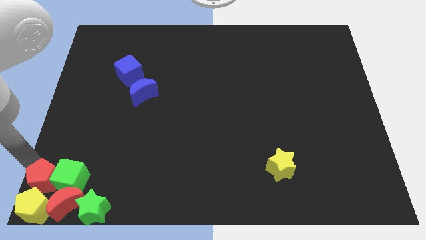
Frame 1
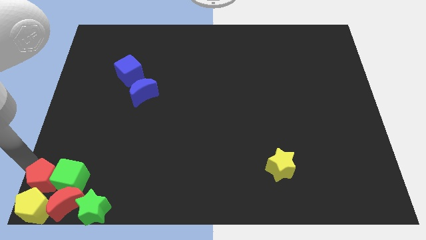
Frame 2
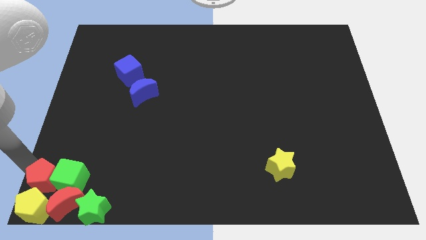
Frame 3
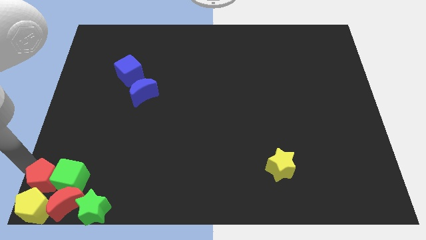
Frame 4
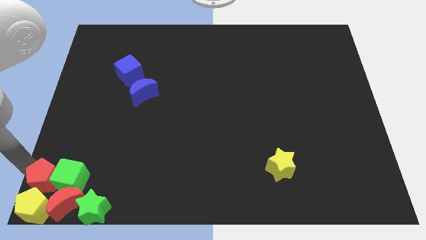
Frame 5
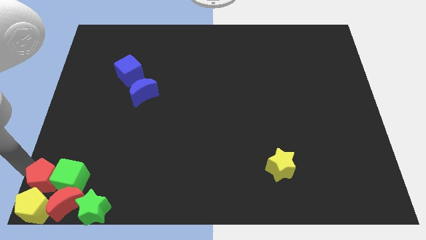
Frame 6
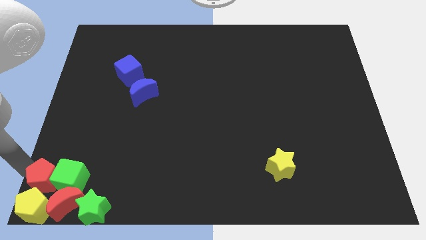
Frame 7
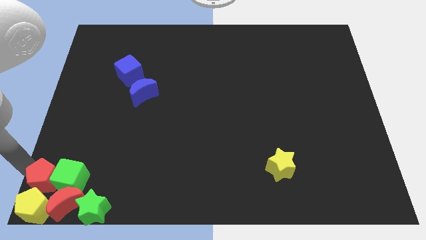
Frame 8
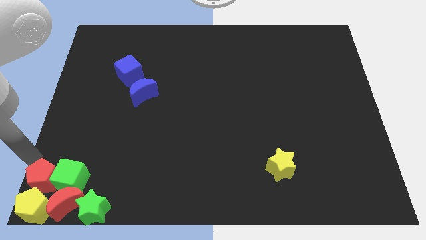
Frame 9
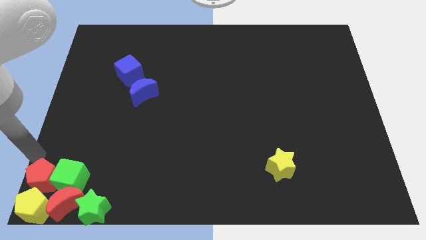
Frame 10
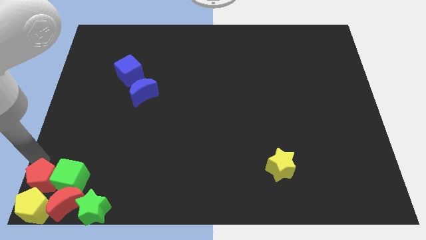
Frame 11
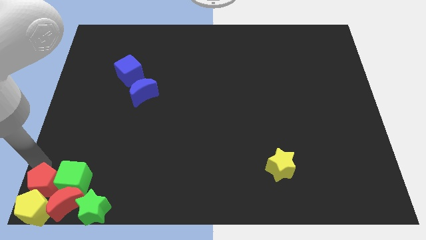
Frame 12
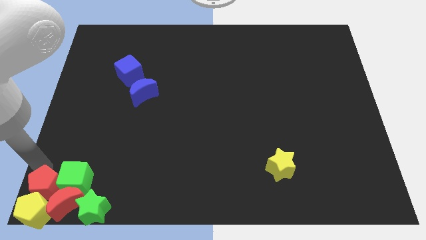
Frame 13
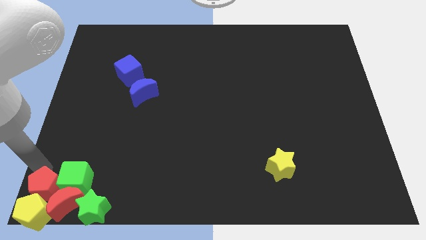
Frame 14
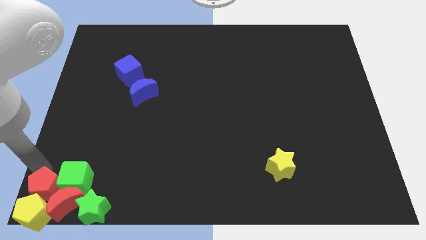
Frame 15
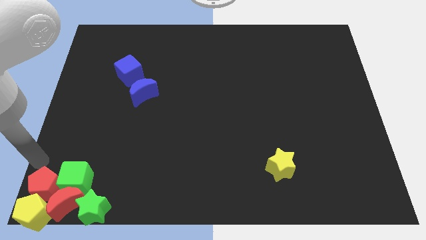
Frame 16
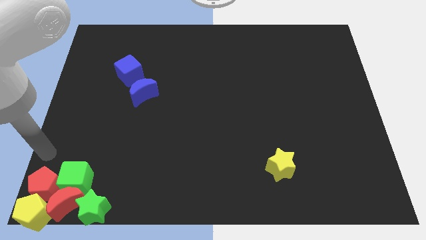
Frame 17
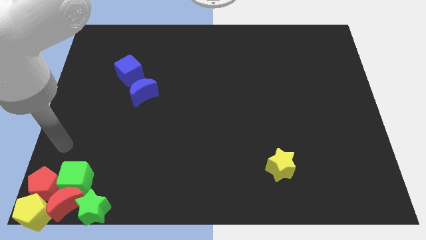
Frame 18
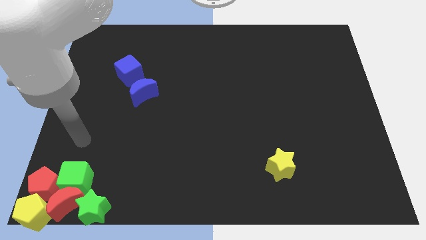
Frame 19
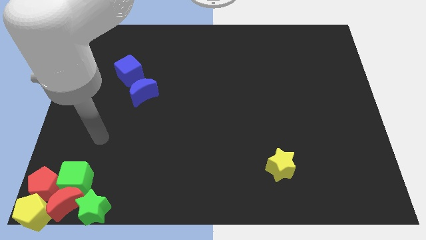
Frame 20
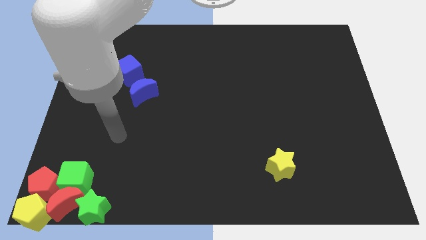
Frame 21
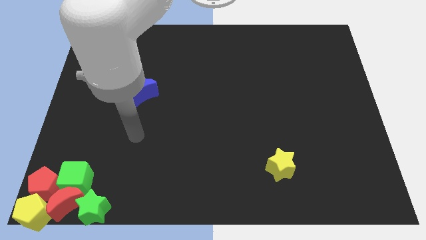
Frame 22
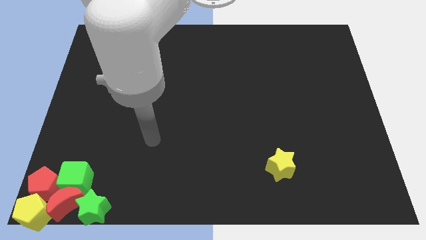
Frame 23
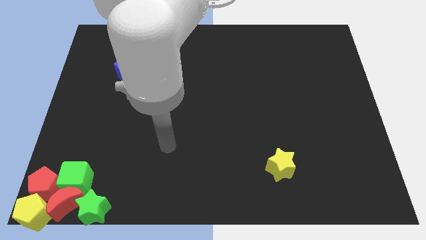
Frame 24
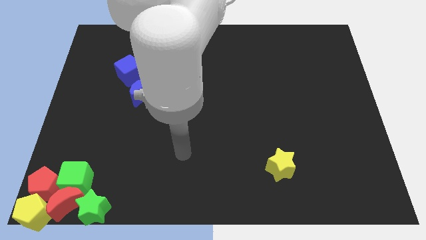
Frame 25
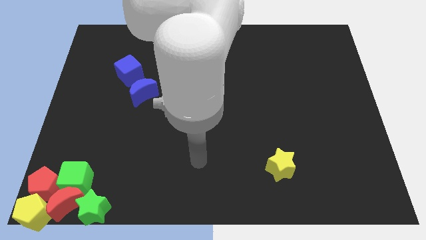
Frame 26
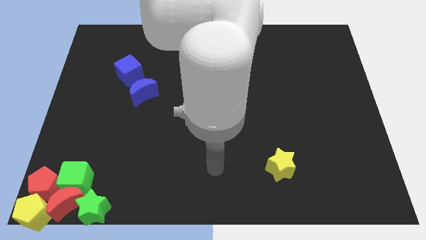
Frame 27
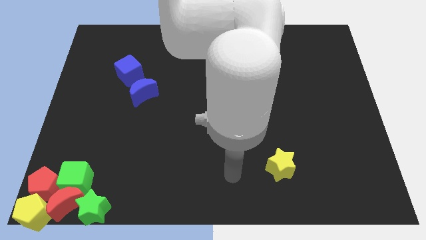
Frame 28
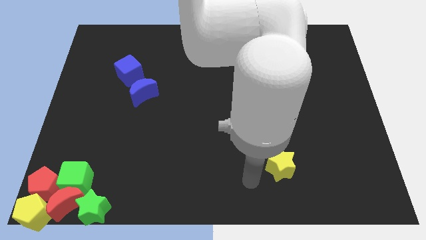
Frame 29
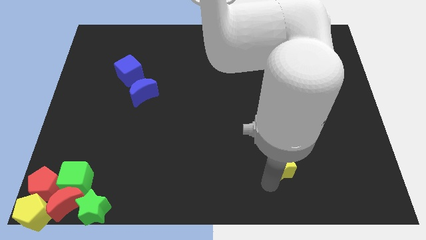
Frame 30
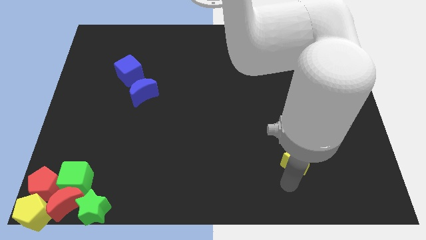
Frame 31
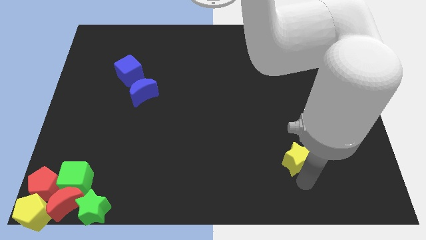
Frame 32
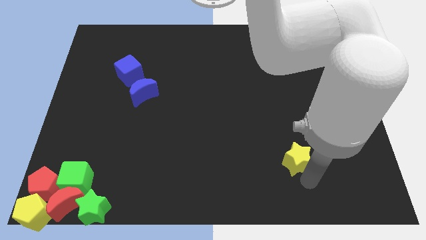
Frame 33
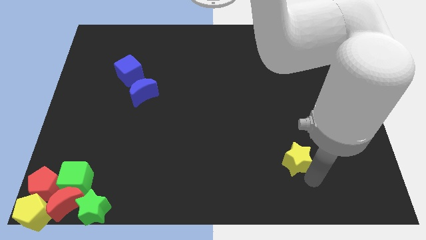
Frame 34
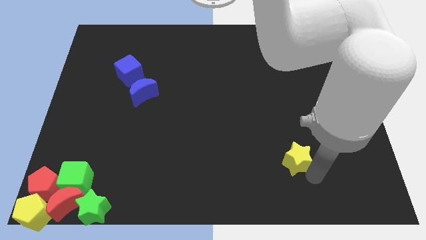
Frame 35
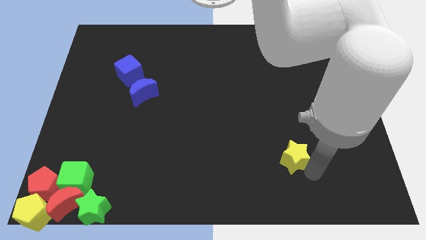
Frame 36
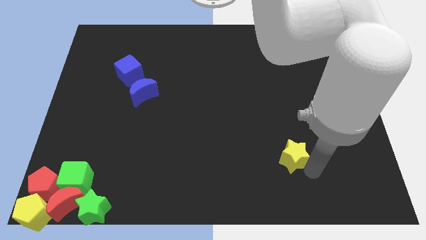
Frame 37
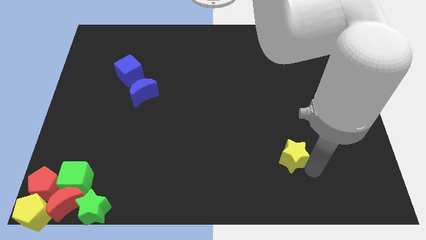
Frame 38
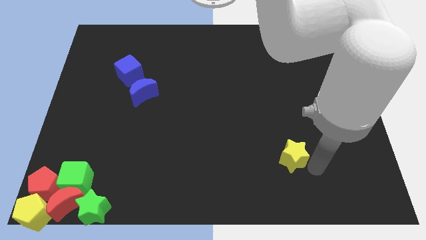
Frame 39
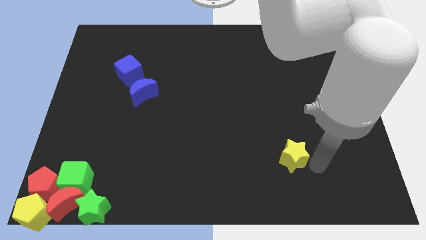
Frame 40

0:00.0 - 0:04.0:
touch the bottom of the yellow star

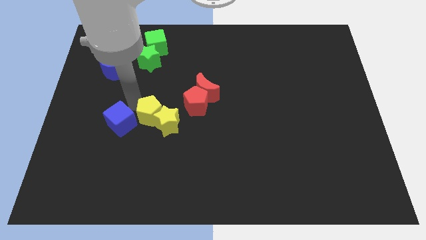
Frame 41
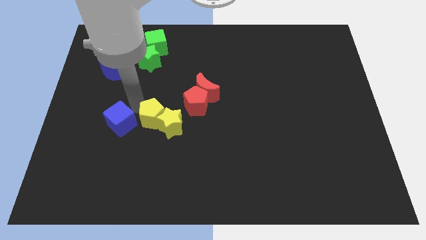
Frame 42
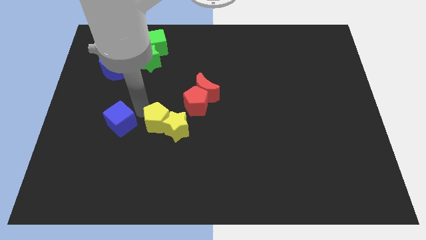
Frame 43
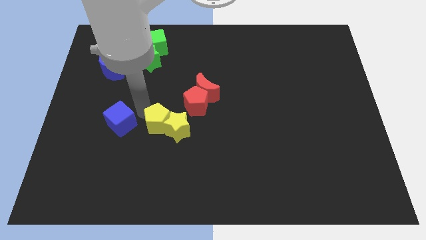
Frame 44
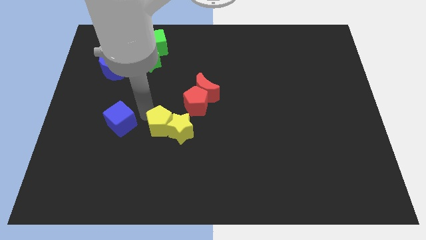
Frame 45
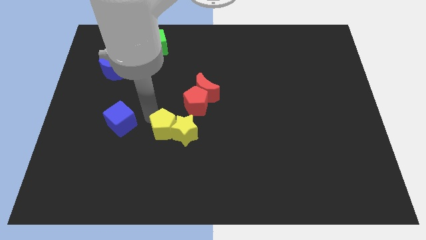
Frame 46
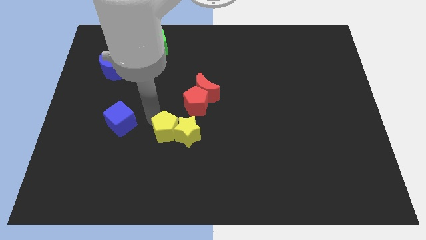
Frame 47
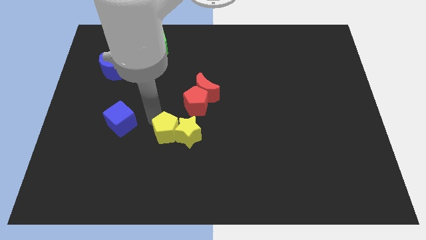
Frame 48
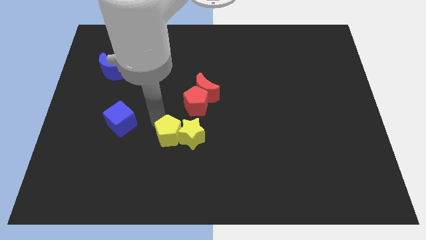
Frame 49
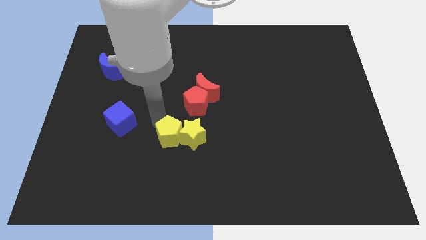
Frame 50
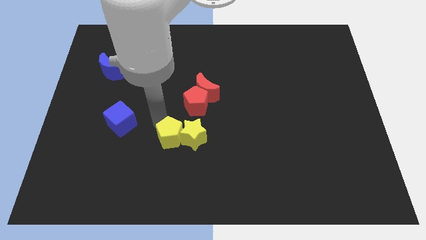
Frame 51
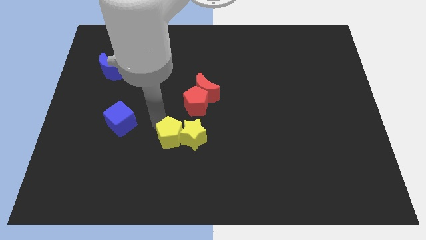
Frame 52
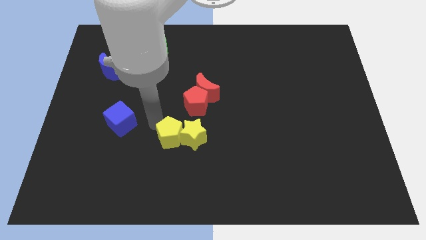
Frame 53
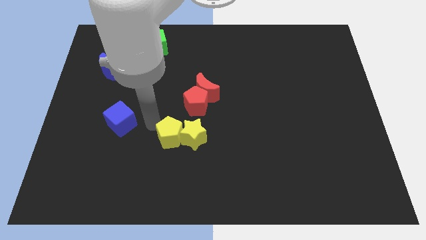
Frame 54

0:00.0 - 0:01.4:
push the yellow star and yellow pentagon towards the bottom center of the board

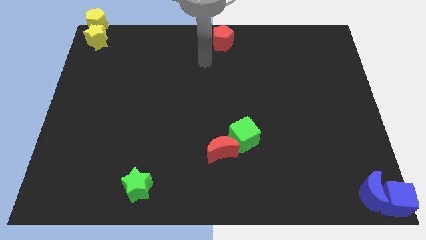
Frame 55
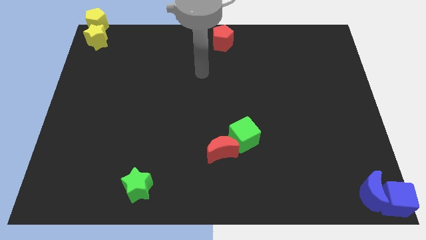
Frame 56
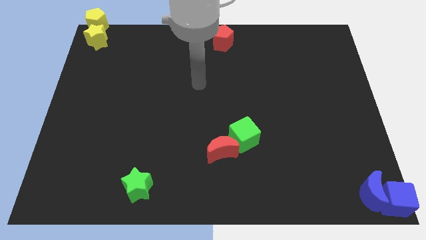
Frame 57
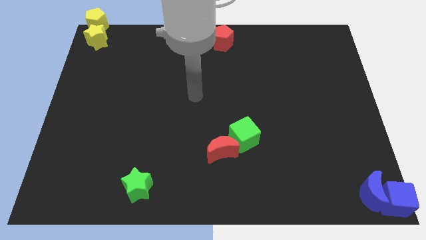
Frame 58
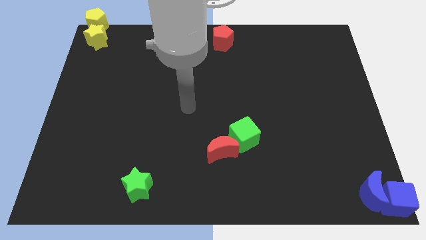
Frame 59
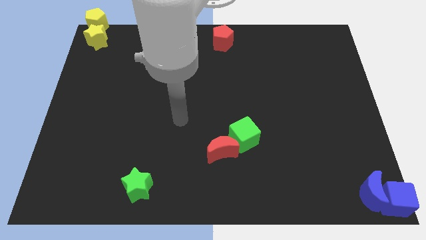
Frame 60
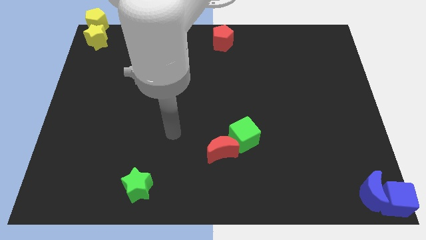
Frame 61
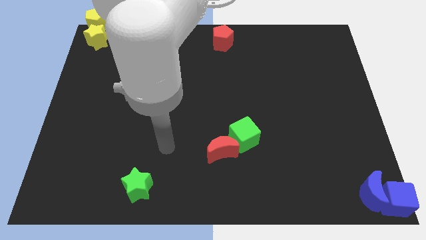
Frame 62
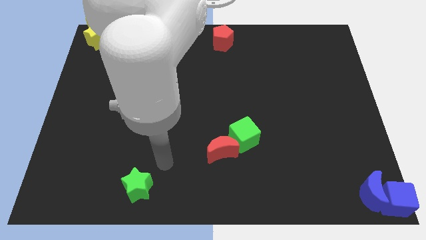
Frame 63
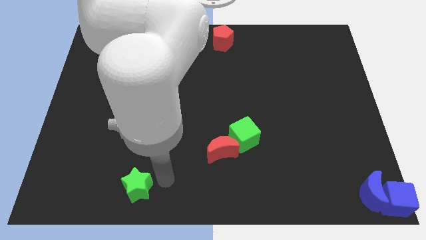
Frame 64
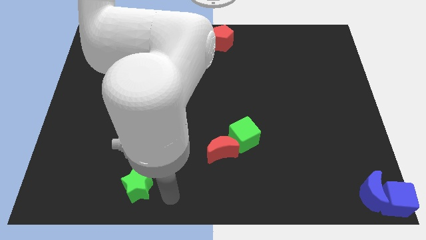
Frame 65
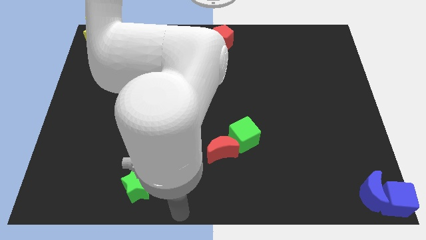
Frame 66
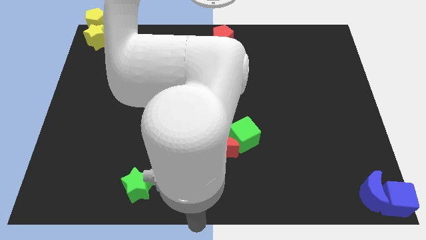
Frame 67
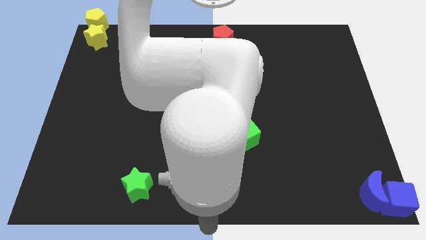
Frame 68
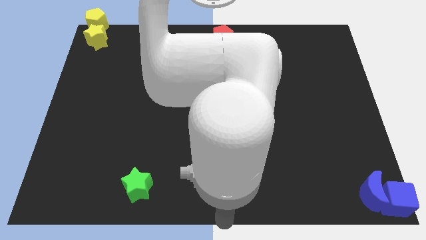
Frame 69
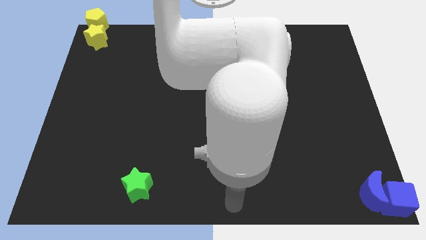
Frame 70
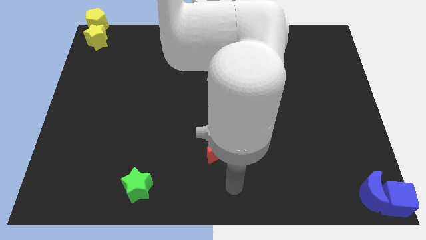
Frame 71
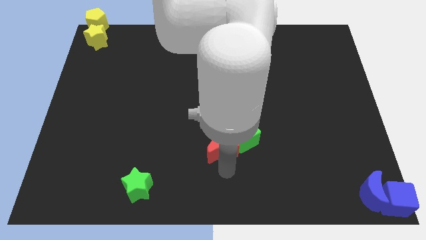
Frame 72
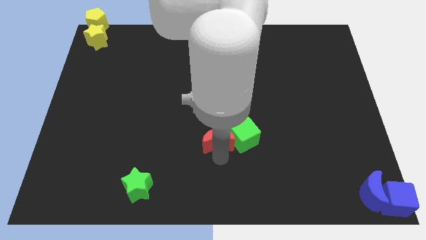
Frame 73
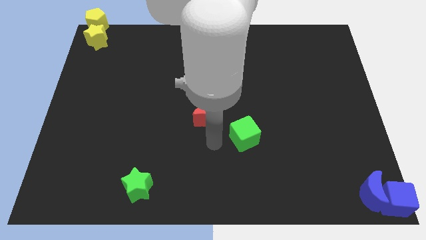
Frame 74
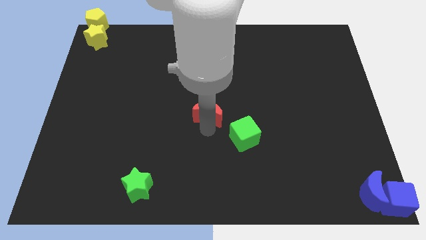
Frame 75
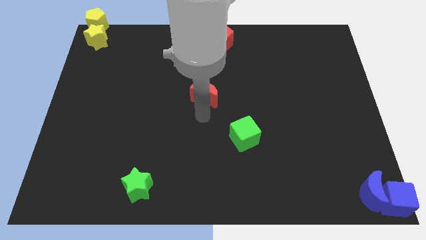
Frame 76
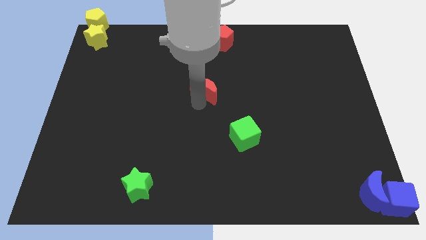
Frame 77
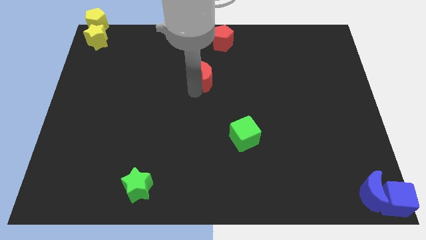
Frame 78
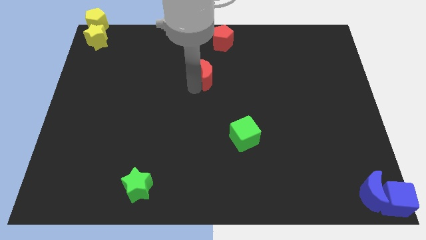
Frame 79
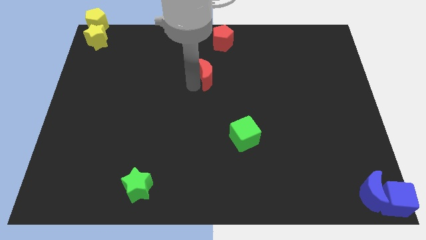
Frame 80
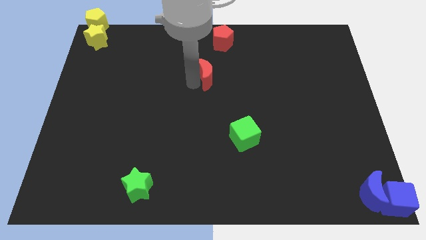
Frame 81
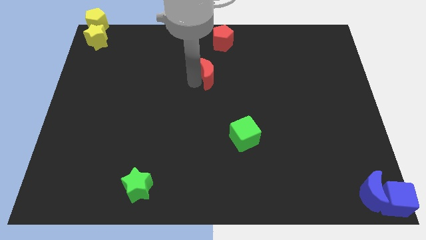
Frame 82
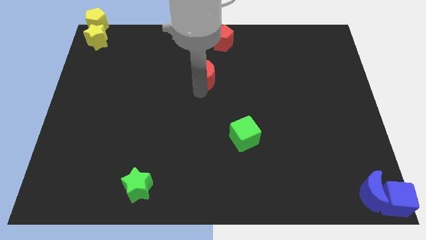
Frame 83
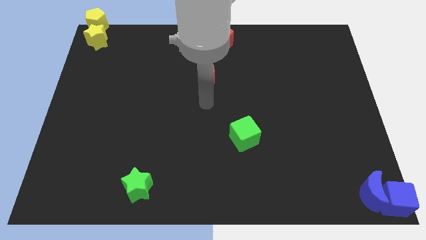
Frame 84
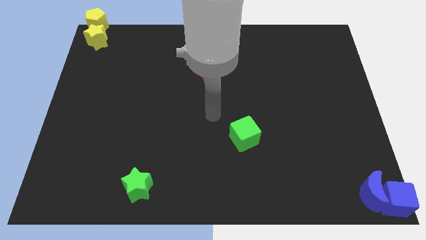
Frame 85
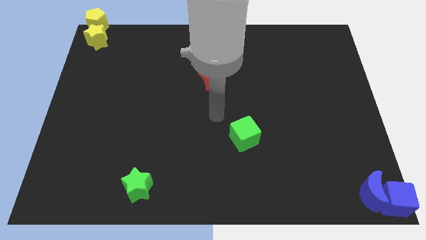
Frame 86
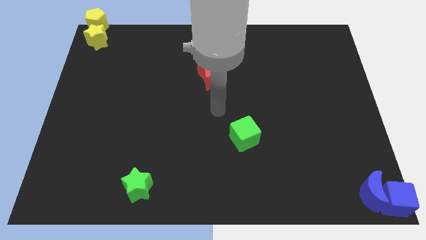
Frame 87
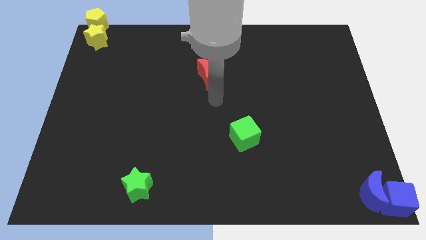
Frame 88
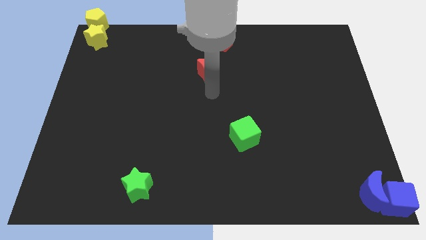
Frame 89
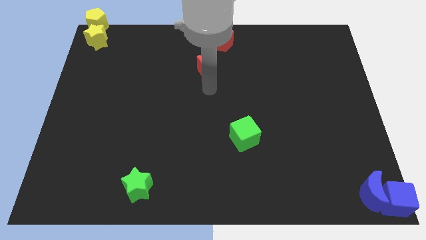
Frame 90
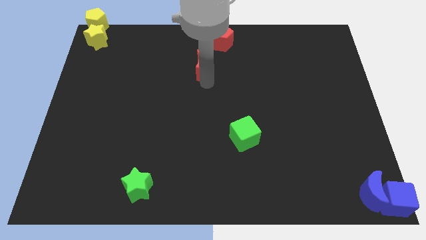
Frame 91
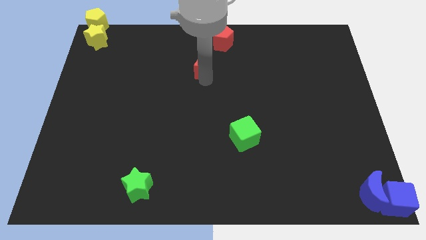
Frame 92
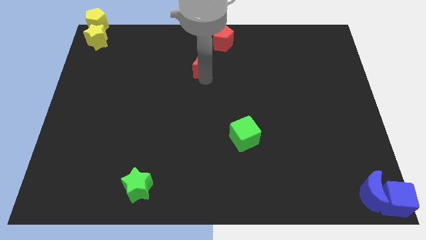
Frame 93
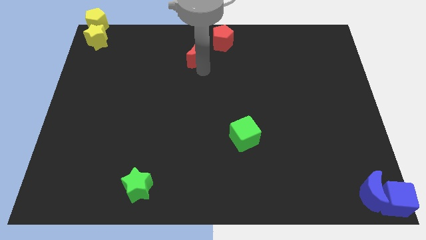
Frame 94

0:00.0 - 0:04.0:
push the red crescent towards the top side
